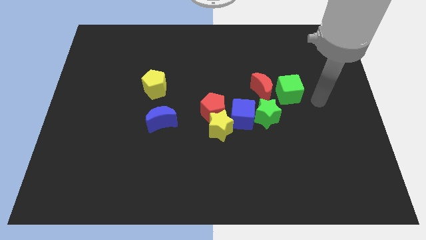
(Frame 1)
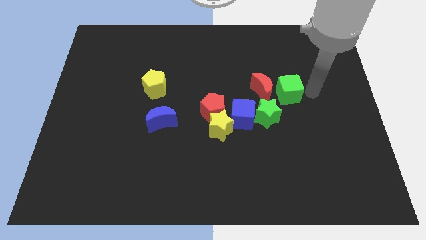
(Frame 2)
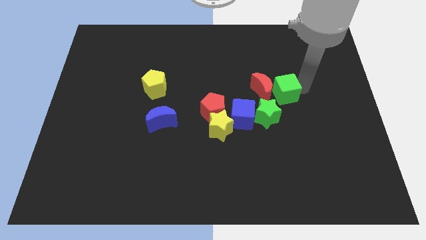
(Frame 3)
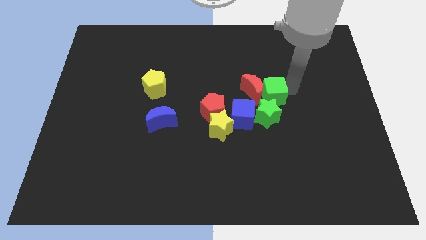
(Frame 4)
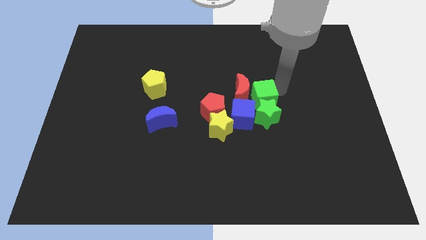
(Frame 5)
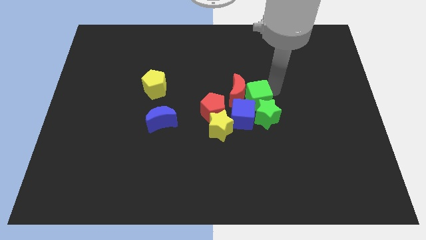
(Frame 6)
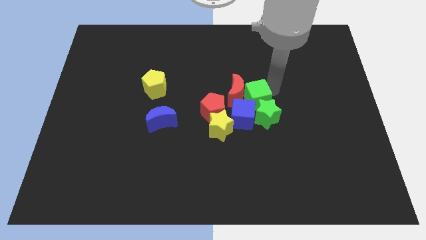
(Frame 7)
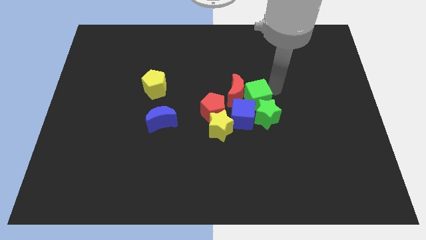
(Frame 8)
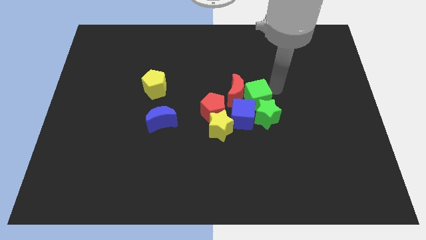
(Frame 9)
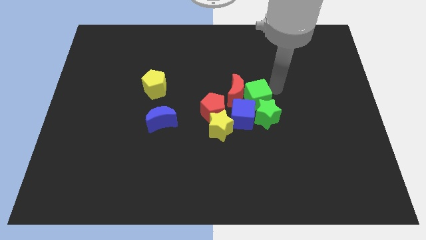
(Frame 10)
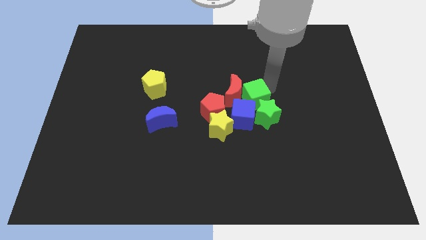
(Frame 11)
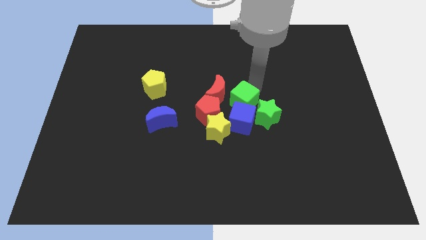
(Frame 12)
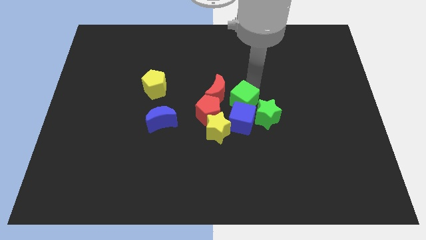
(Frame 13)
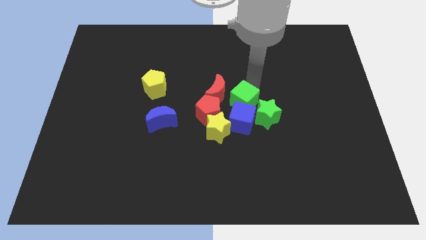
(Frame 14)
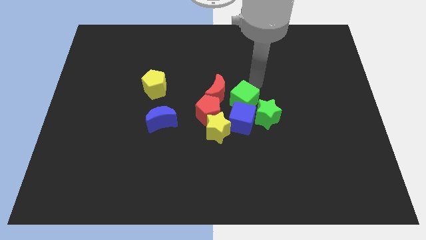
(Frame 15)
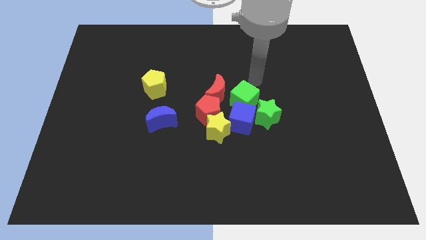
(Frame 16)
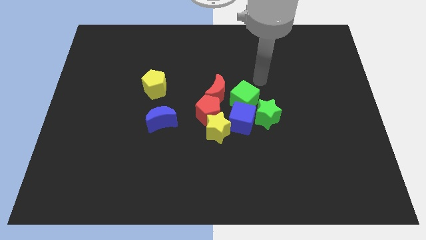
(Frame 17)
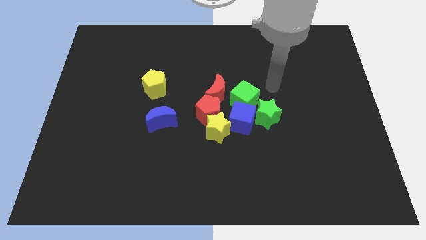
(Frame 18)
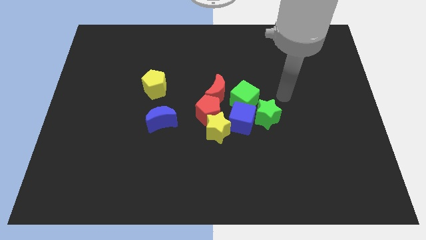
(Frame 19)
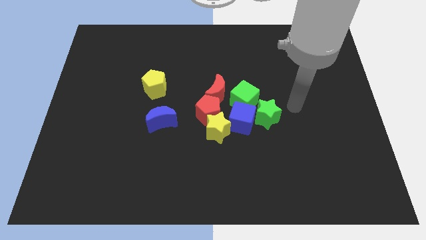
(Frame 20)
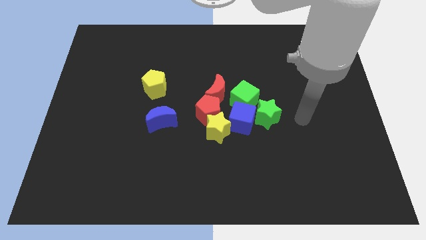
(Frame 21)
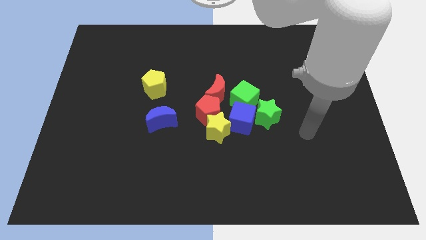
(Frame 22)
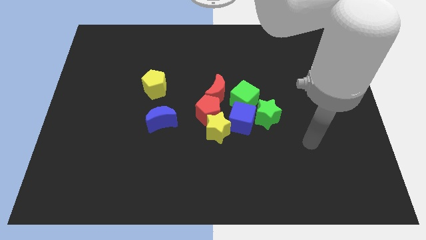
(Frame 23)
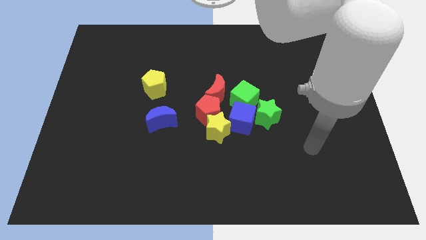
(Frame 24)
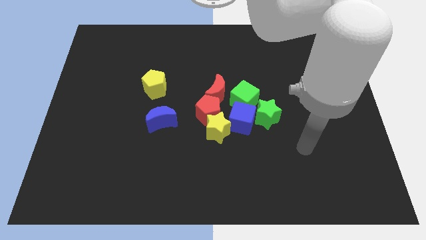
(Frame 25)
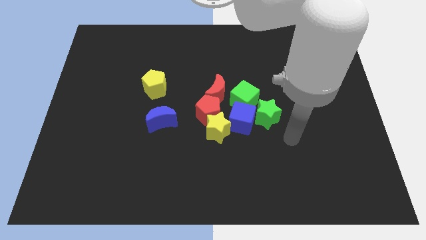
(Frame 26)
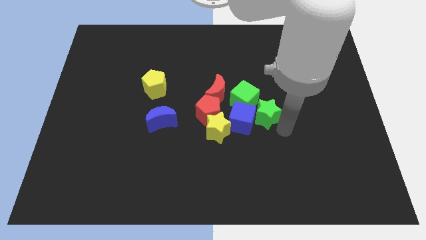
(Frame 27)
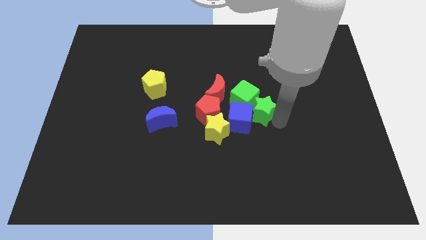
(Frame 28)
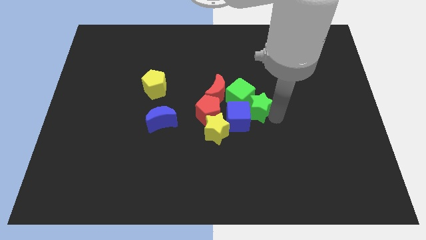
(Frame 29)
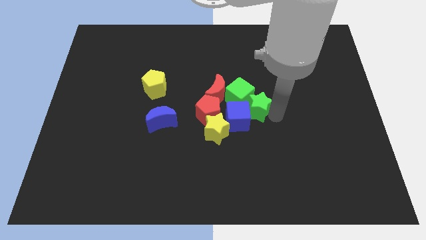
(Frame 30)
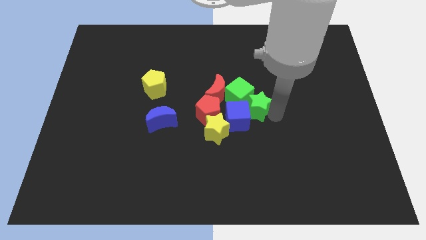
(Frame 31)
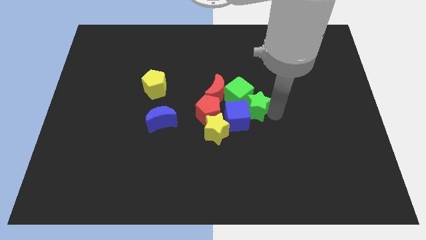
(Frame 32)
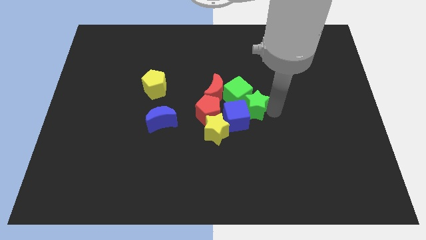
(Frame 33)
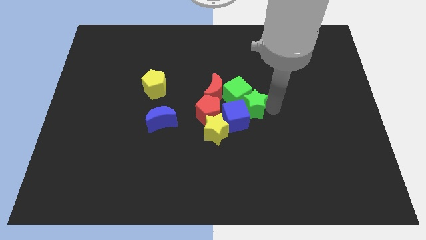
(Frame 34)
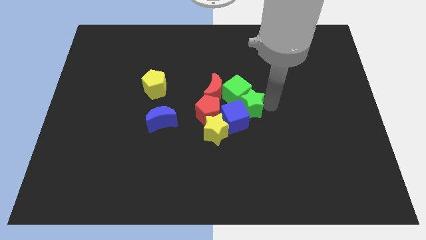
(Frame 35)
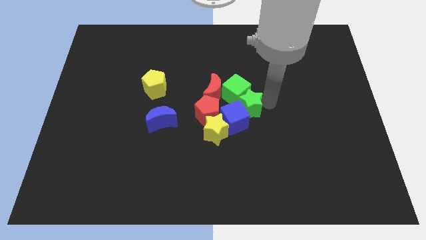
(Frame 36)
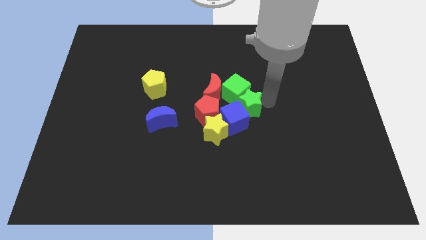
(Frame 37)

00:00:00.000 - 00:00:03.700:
place the green cube in between the red moon and the green star

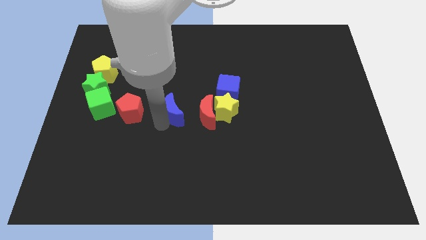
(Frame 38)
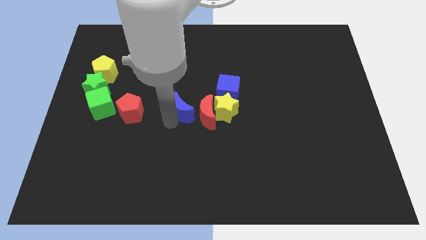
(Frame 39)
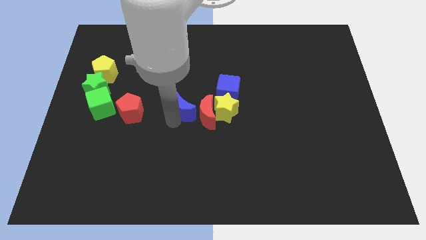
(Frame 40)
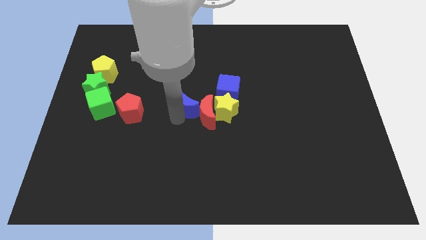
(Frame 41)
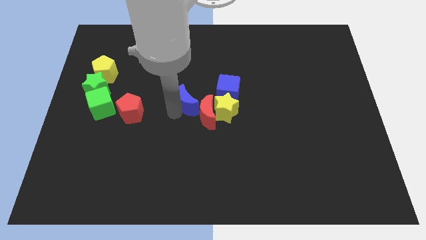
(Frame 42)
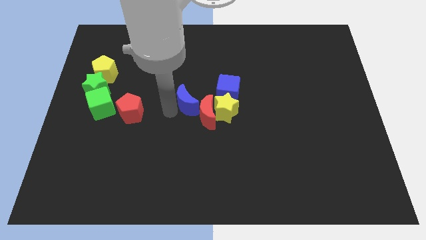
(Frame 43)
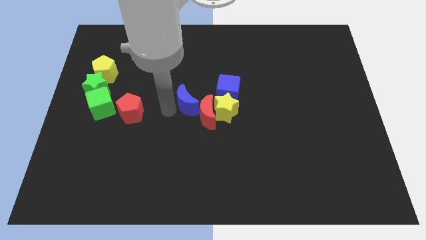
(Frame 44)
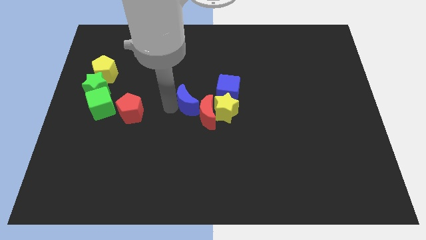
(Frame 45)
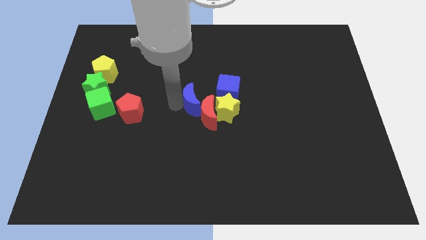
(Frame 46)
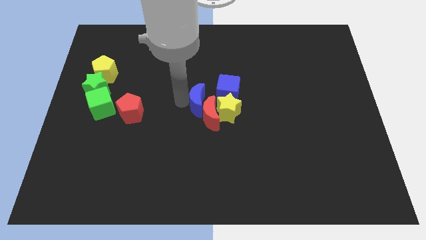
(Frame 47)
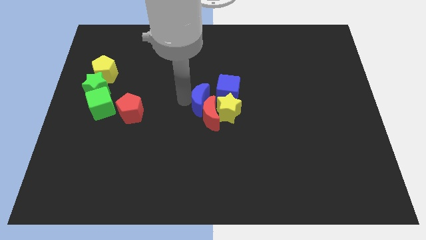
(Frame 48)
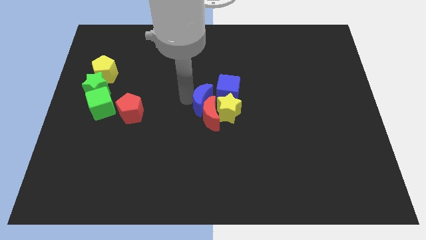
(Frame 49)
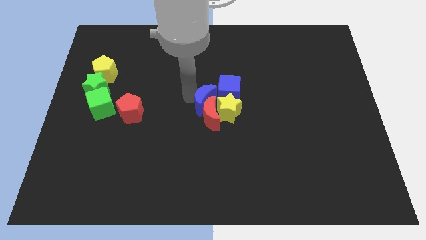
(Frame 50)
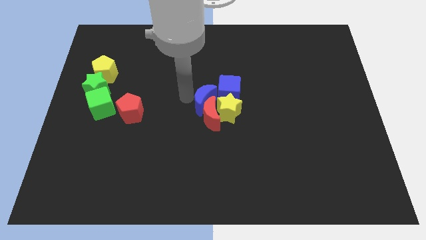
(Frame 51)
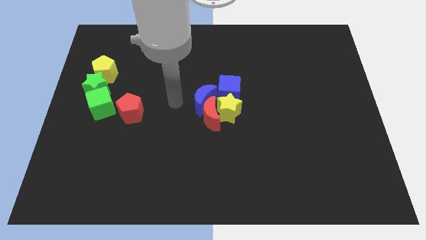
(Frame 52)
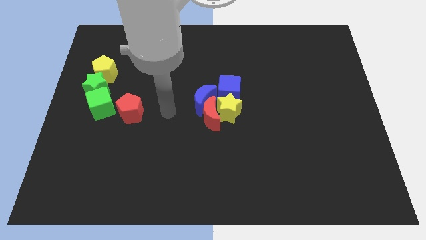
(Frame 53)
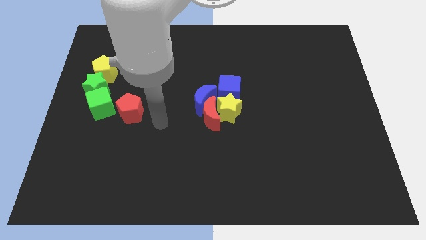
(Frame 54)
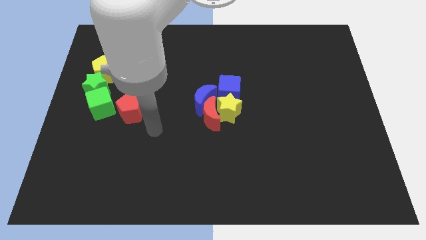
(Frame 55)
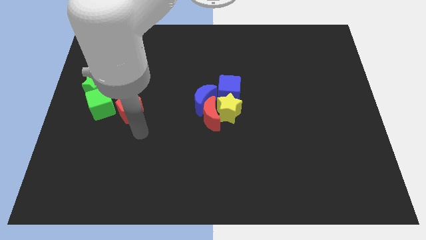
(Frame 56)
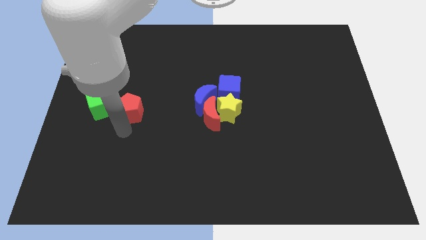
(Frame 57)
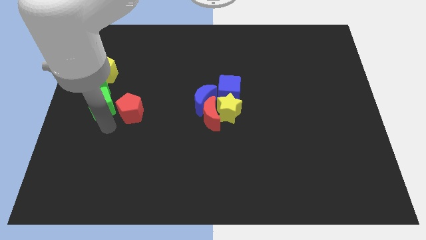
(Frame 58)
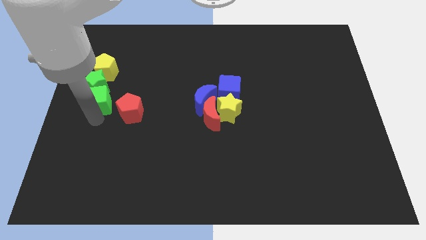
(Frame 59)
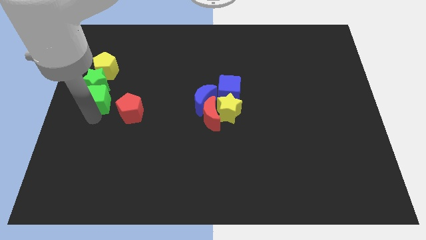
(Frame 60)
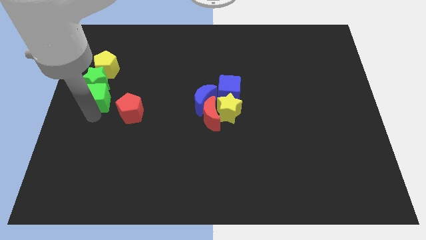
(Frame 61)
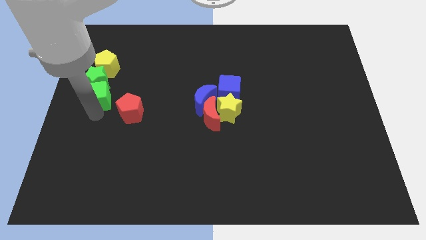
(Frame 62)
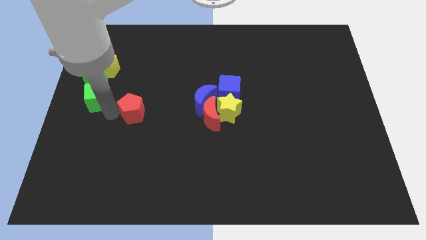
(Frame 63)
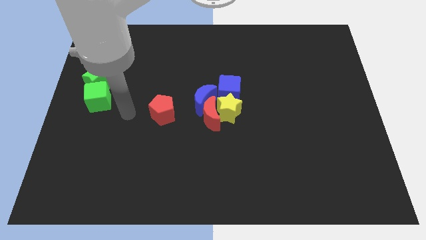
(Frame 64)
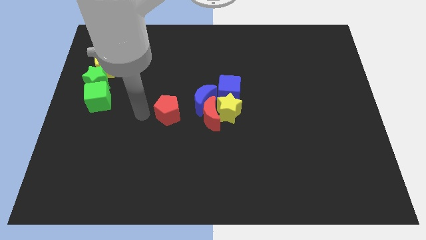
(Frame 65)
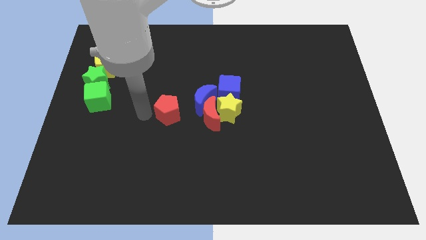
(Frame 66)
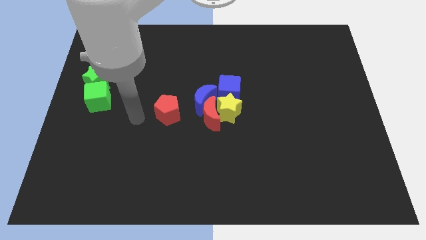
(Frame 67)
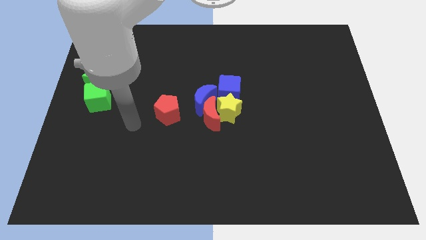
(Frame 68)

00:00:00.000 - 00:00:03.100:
move the red pentagon away from the green cube

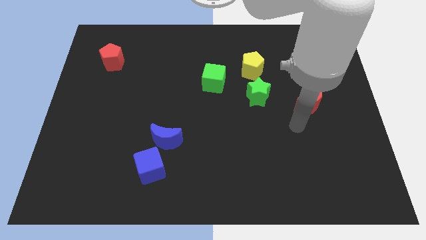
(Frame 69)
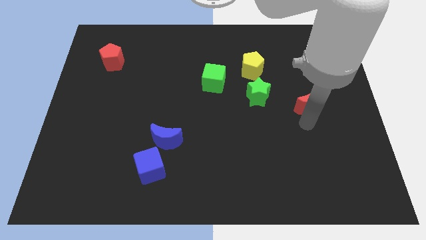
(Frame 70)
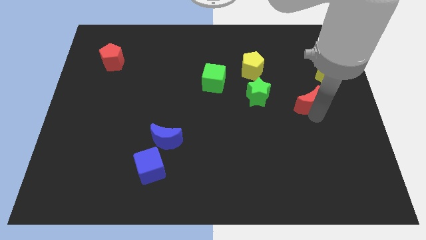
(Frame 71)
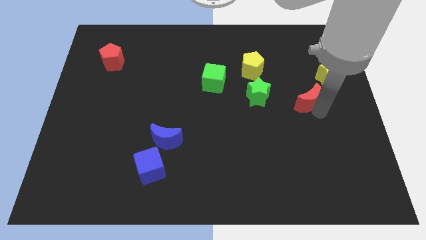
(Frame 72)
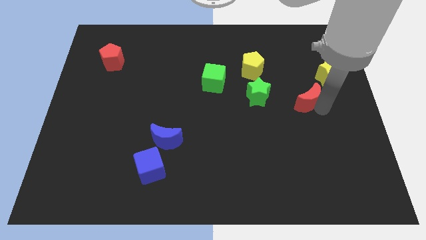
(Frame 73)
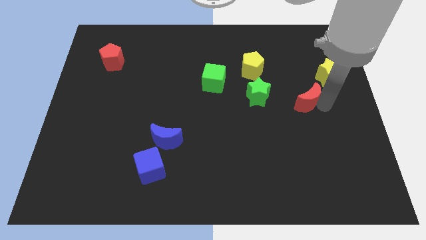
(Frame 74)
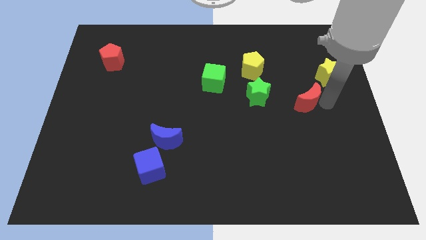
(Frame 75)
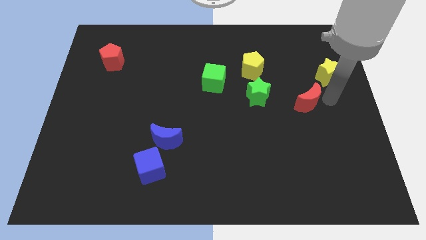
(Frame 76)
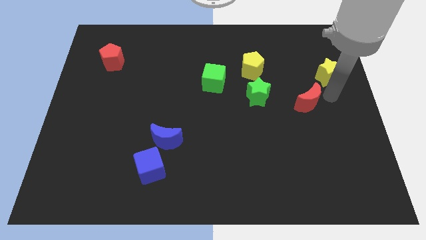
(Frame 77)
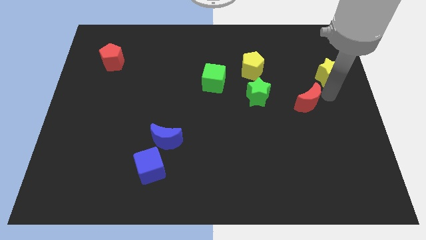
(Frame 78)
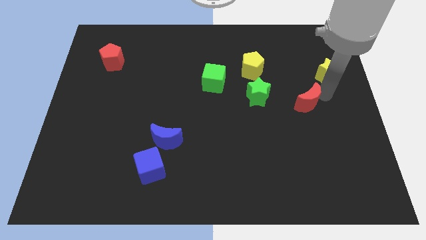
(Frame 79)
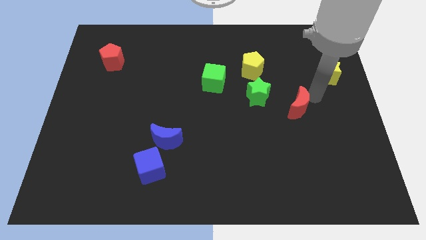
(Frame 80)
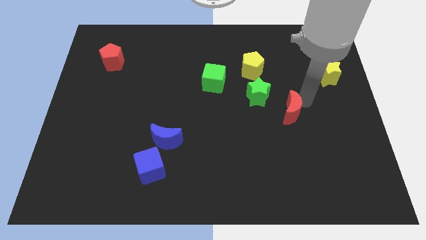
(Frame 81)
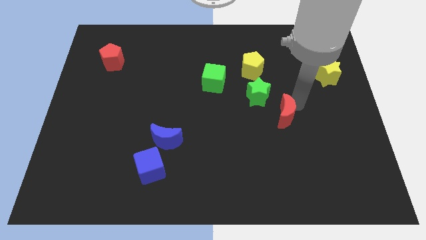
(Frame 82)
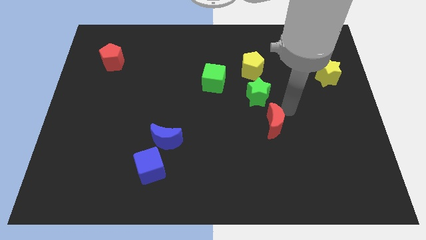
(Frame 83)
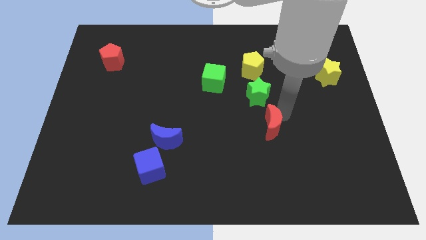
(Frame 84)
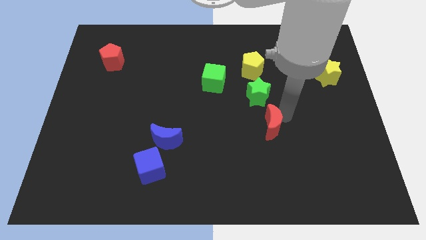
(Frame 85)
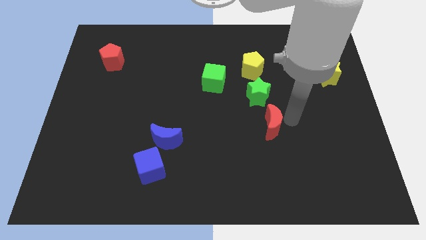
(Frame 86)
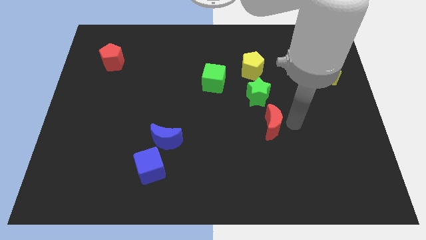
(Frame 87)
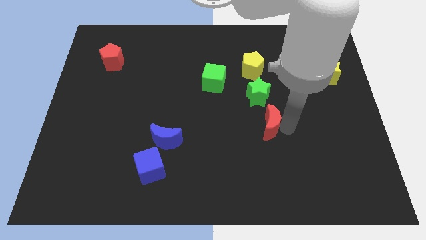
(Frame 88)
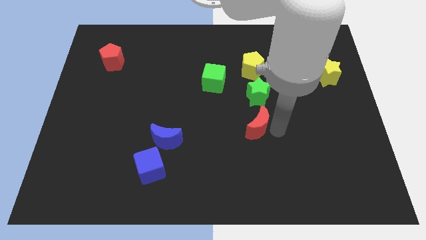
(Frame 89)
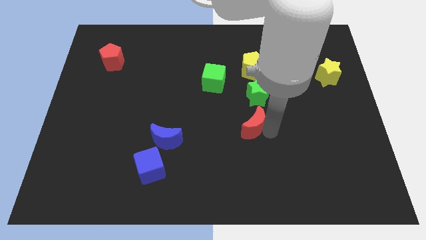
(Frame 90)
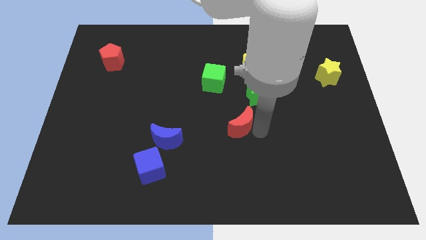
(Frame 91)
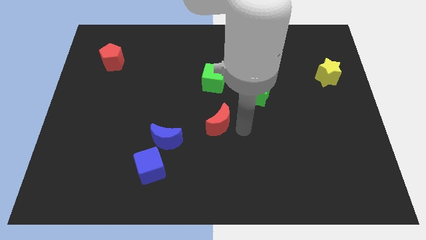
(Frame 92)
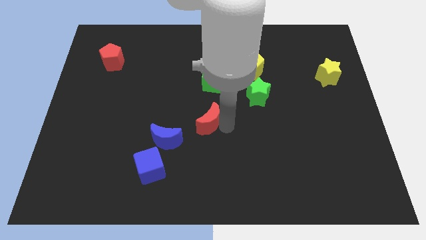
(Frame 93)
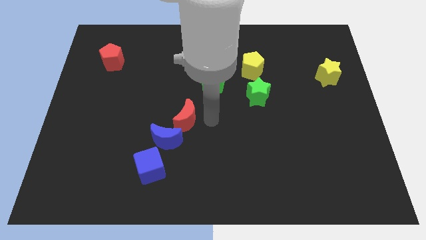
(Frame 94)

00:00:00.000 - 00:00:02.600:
move the red crescent to the bottom of the green cube
